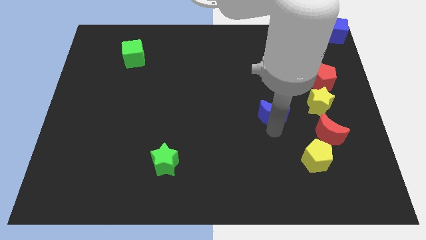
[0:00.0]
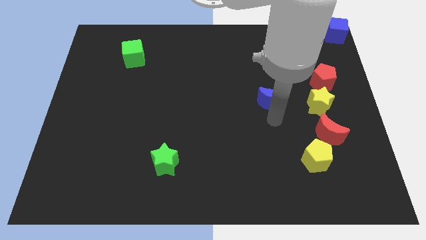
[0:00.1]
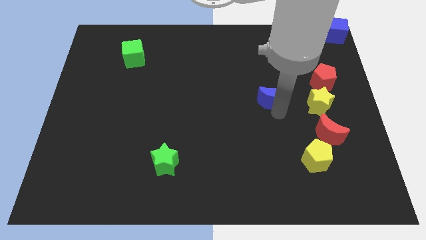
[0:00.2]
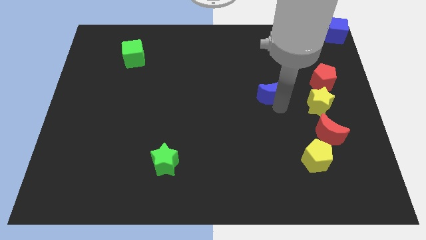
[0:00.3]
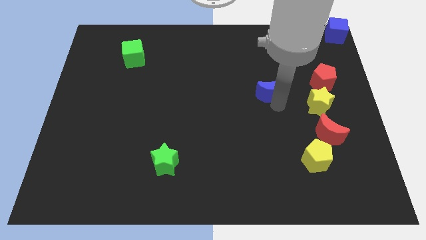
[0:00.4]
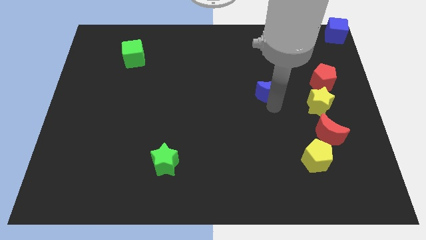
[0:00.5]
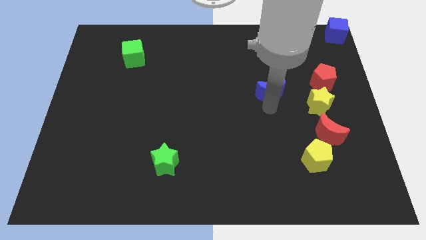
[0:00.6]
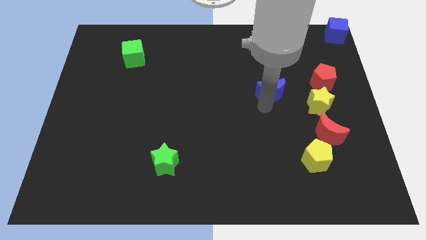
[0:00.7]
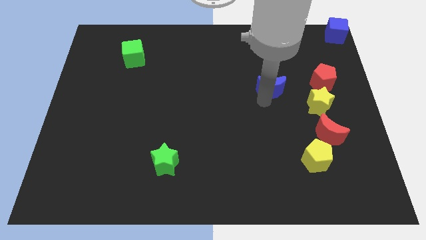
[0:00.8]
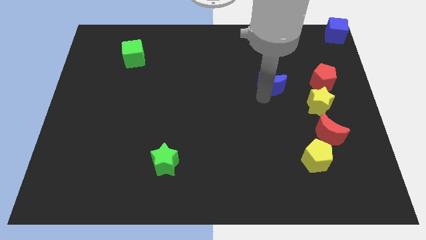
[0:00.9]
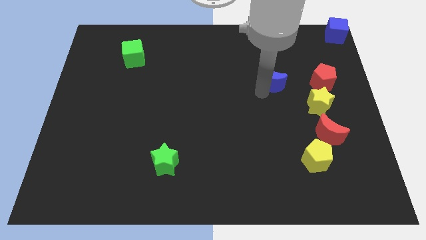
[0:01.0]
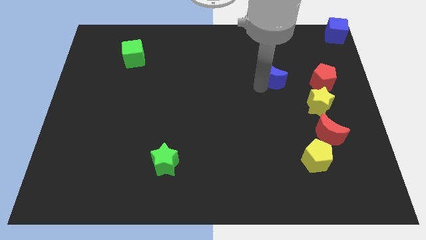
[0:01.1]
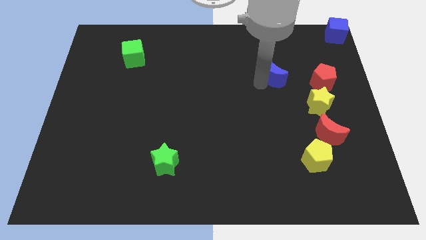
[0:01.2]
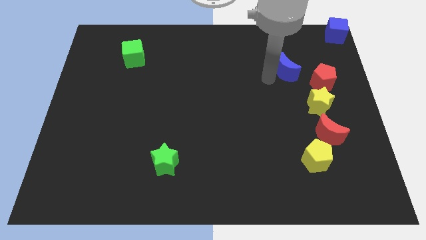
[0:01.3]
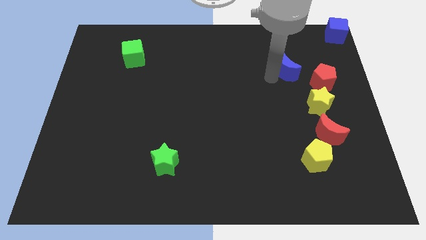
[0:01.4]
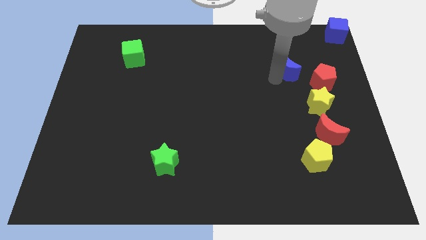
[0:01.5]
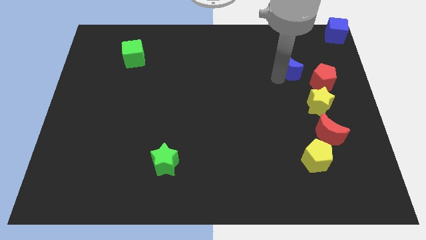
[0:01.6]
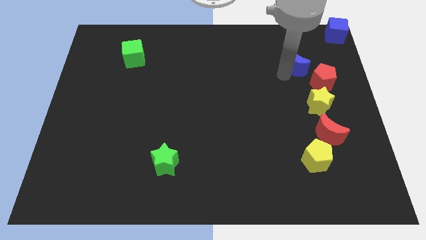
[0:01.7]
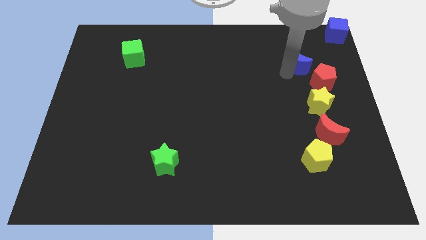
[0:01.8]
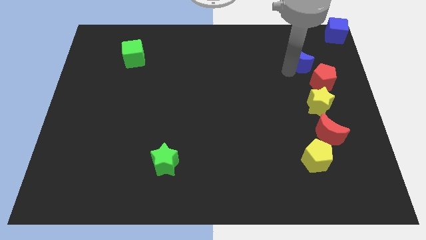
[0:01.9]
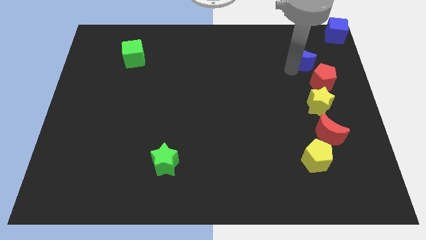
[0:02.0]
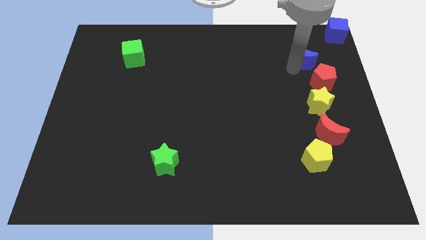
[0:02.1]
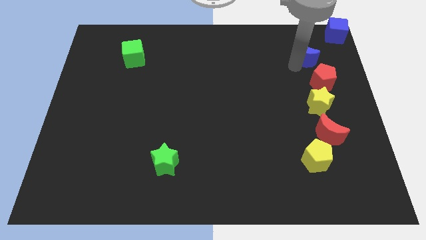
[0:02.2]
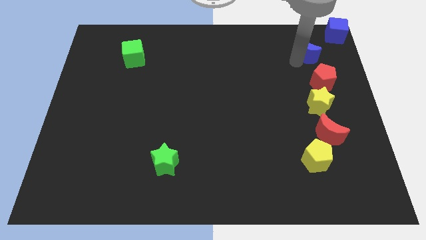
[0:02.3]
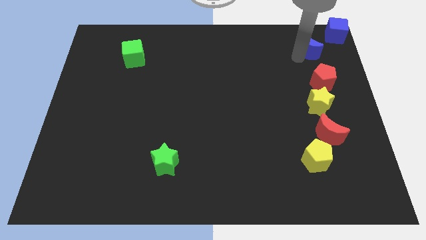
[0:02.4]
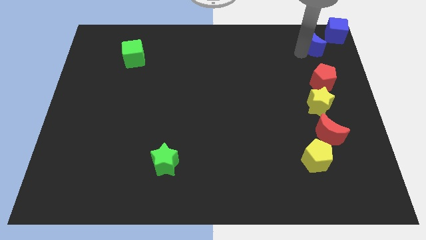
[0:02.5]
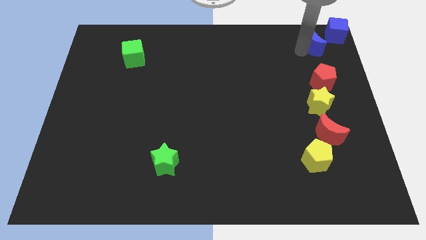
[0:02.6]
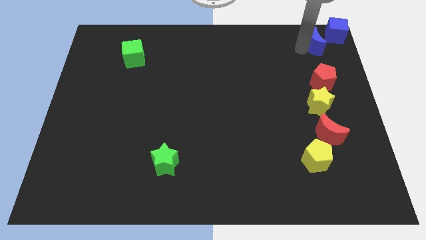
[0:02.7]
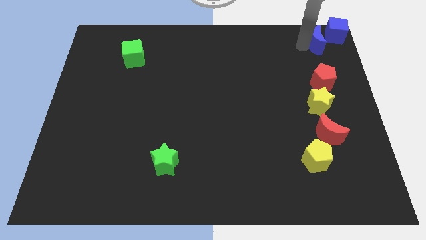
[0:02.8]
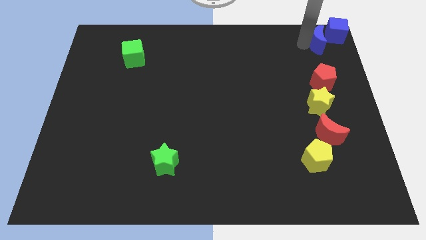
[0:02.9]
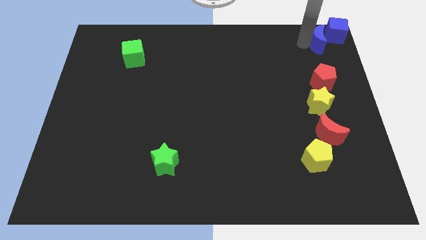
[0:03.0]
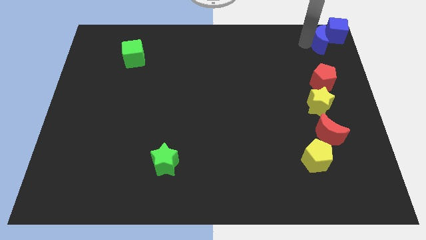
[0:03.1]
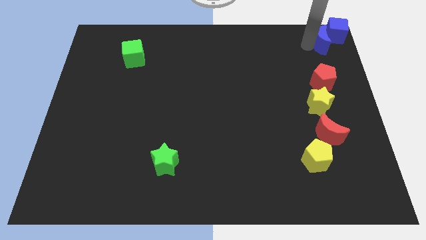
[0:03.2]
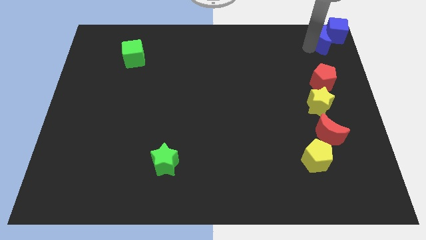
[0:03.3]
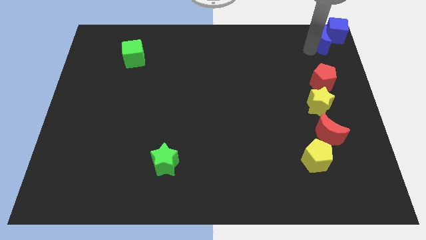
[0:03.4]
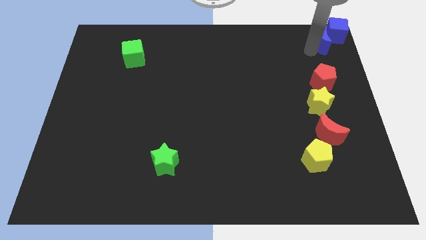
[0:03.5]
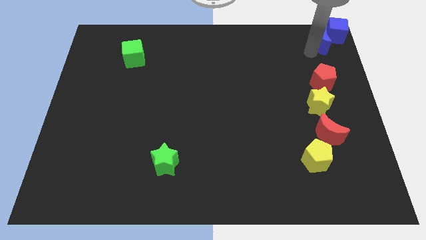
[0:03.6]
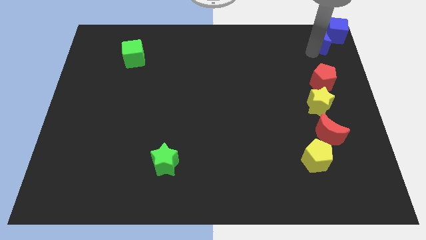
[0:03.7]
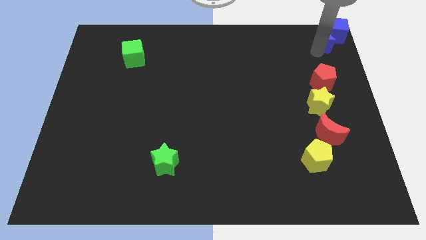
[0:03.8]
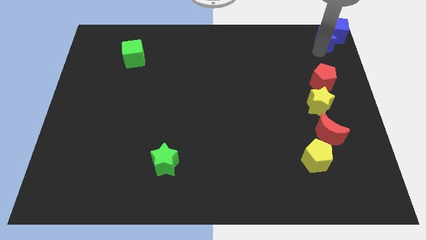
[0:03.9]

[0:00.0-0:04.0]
place the blue crescent below the blue cube

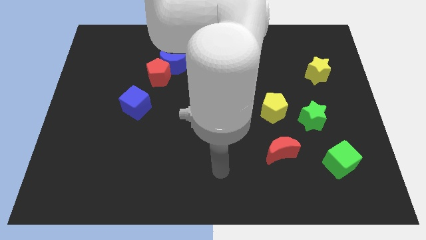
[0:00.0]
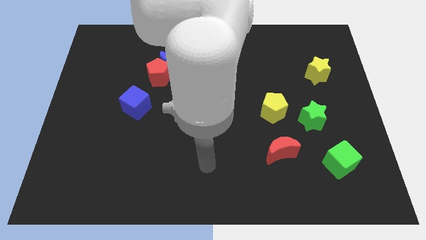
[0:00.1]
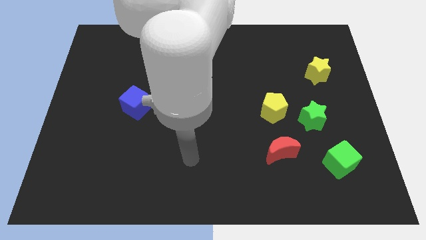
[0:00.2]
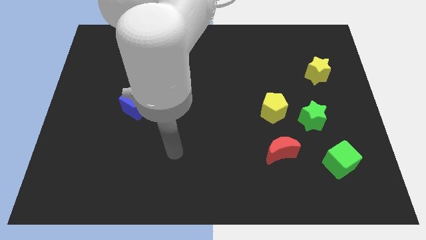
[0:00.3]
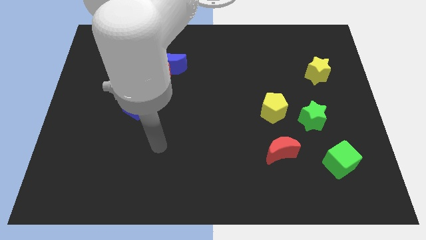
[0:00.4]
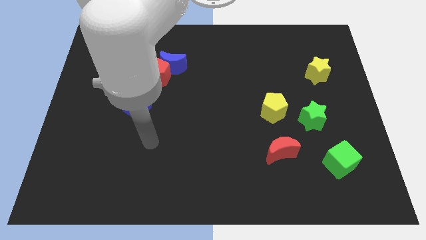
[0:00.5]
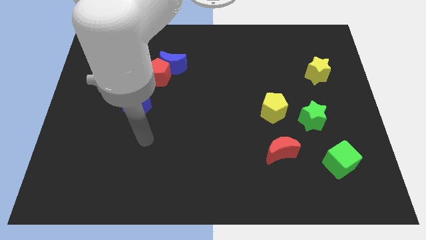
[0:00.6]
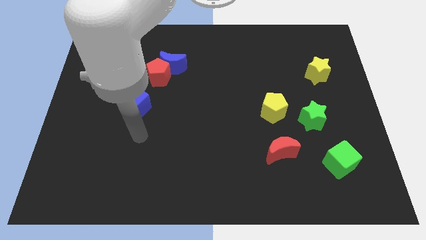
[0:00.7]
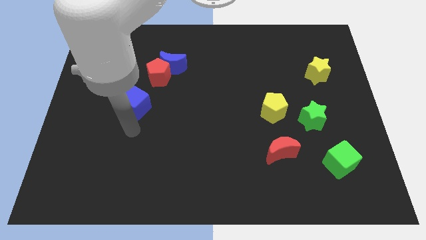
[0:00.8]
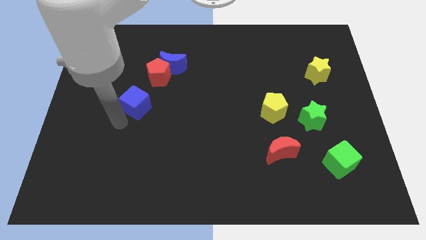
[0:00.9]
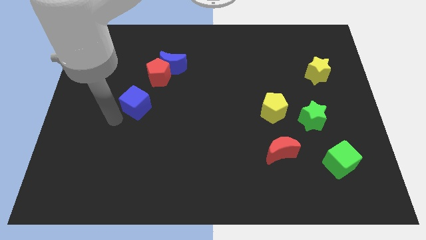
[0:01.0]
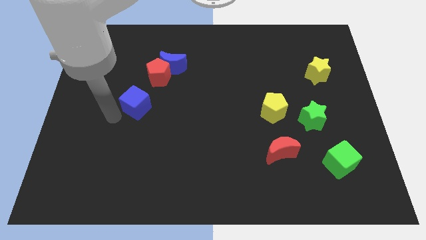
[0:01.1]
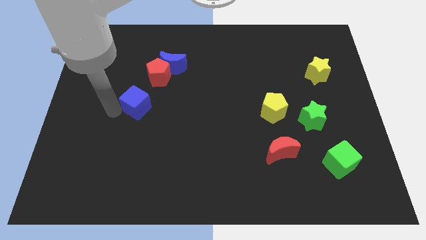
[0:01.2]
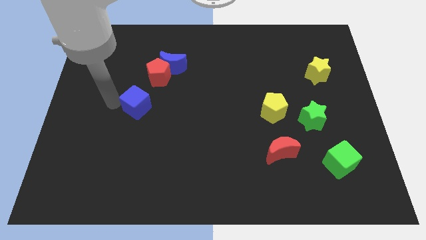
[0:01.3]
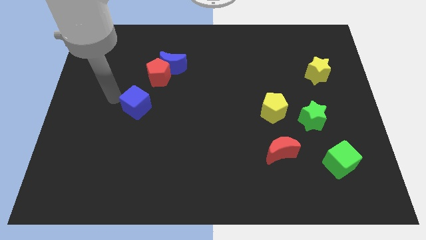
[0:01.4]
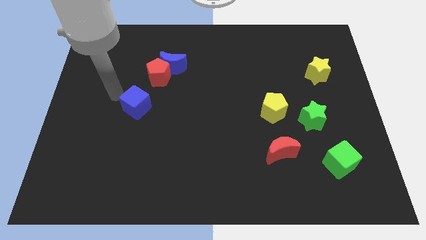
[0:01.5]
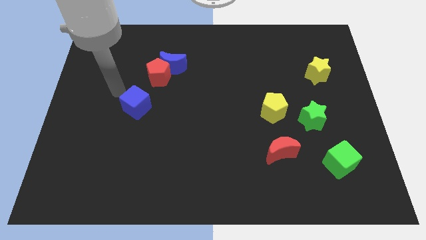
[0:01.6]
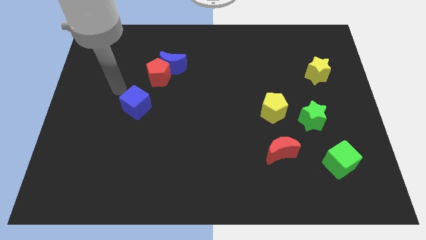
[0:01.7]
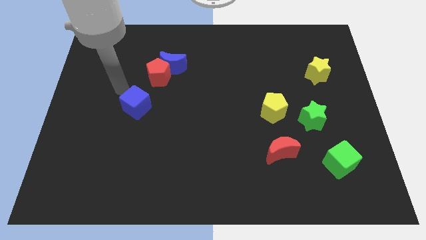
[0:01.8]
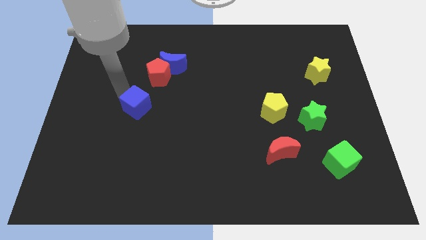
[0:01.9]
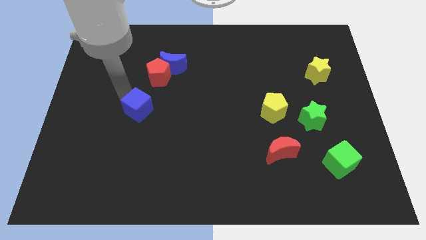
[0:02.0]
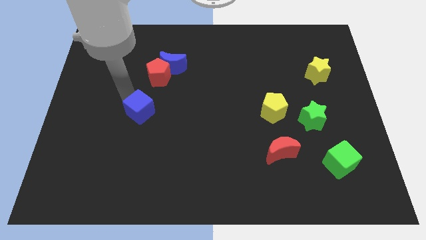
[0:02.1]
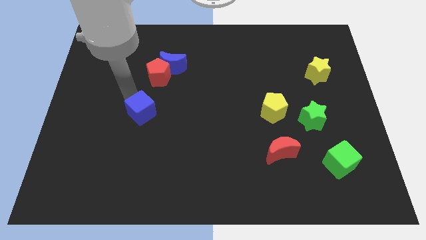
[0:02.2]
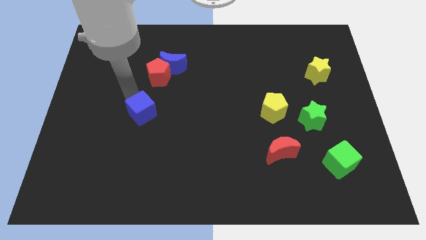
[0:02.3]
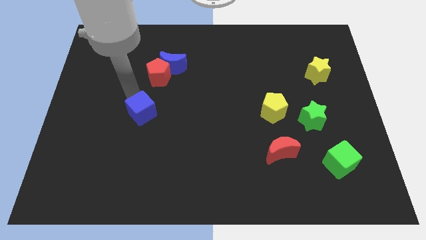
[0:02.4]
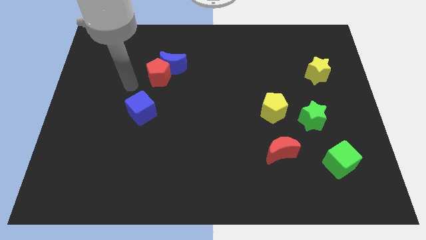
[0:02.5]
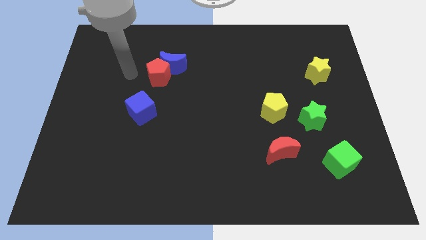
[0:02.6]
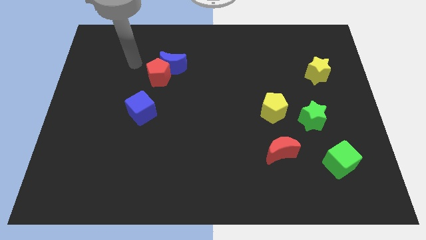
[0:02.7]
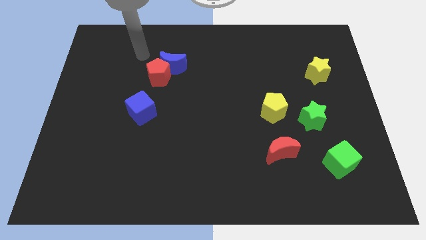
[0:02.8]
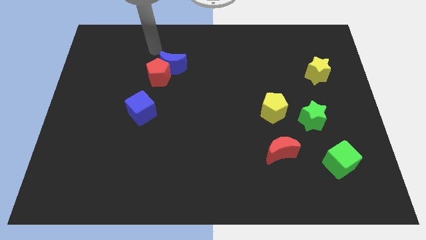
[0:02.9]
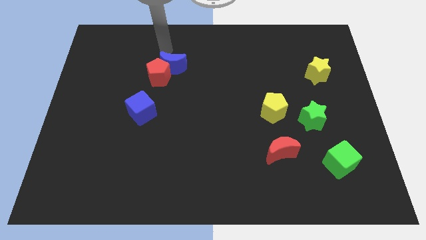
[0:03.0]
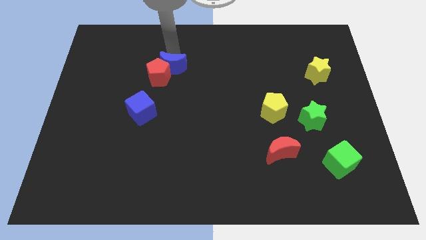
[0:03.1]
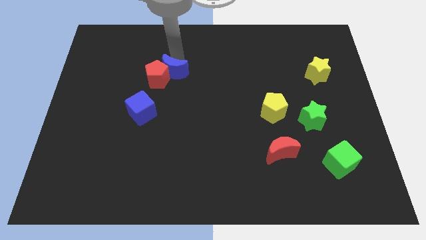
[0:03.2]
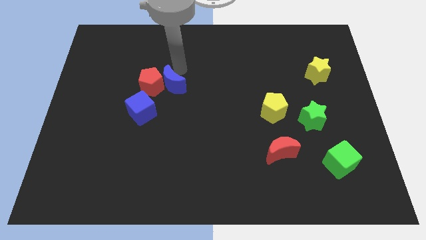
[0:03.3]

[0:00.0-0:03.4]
move arm to the blue moon

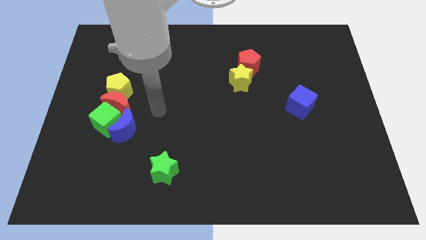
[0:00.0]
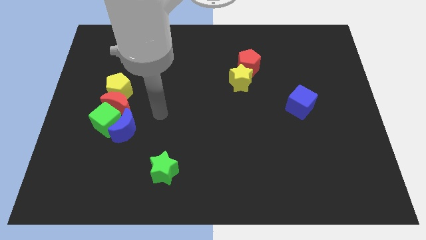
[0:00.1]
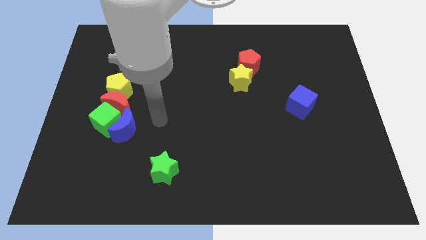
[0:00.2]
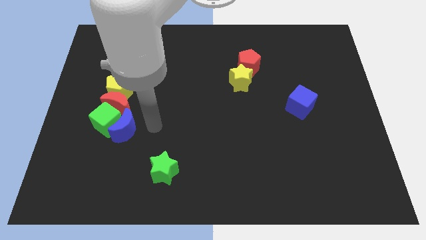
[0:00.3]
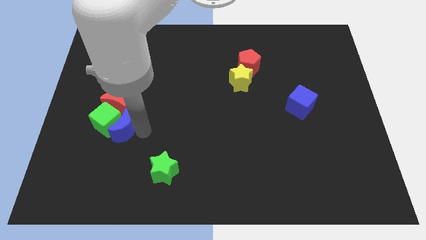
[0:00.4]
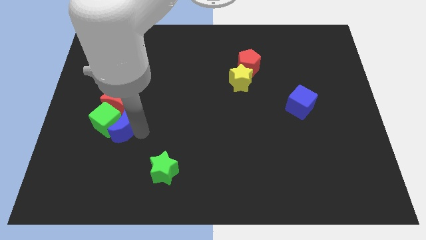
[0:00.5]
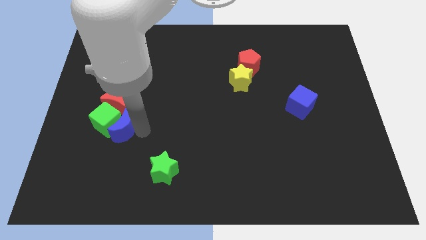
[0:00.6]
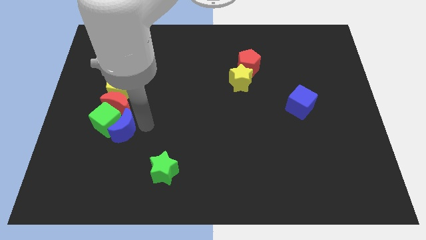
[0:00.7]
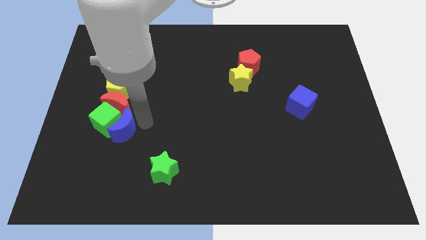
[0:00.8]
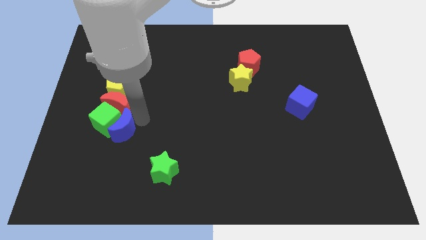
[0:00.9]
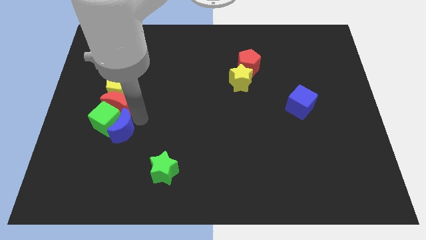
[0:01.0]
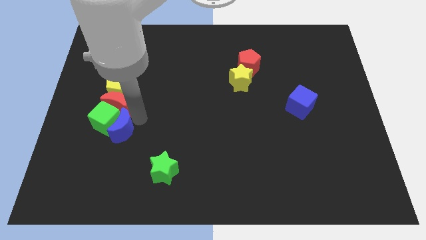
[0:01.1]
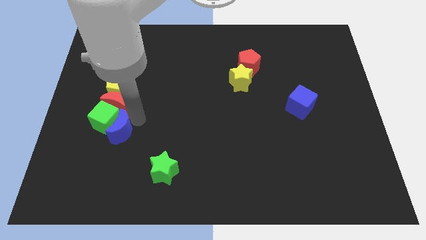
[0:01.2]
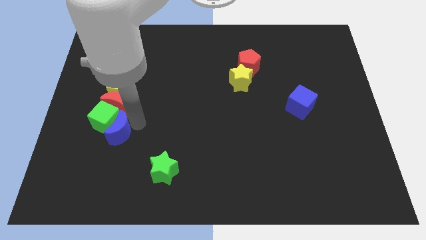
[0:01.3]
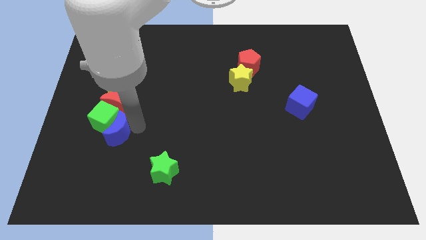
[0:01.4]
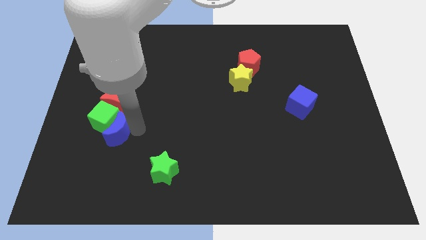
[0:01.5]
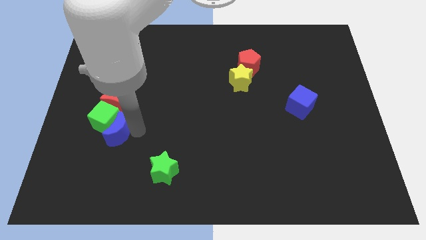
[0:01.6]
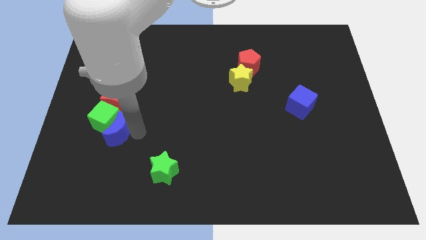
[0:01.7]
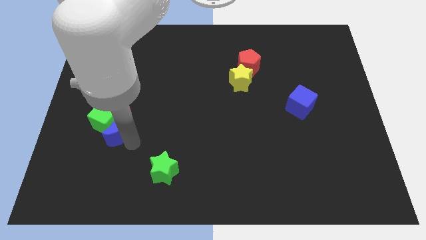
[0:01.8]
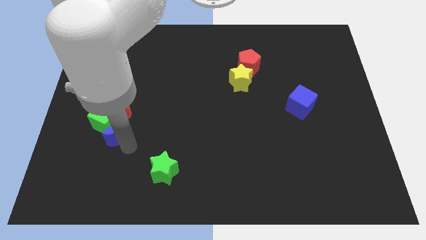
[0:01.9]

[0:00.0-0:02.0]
push the blue crescent into the green cube
